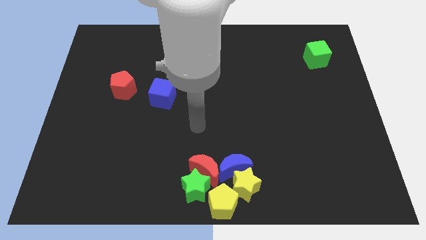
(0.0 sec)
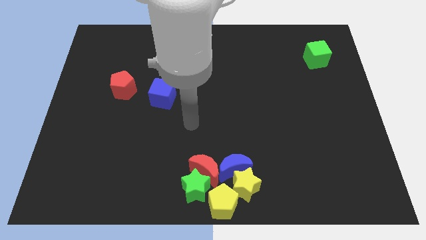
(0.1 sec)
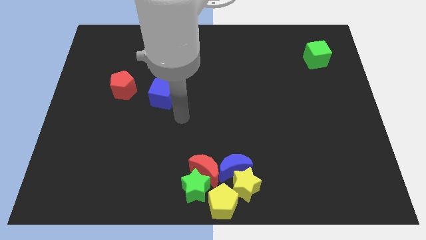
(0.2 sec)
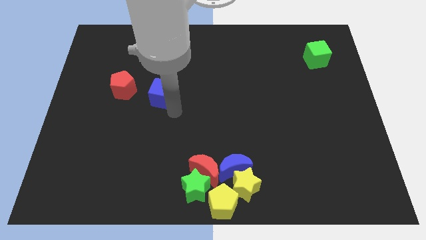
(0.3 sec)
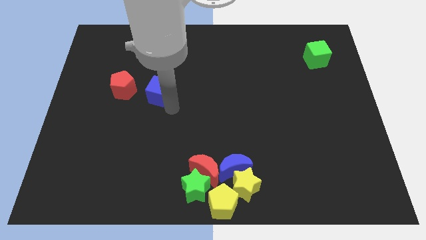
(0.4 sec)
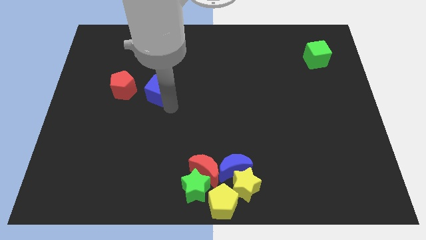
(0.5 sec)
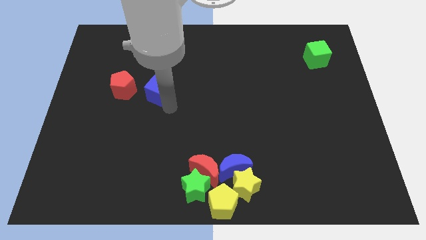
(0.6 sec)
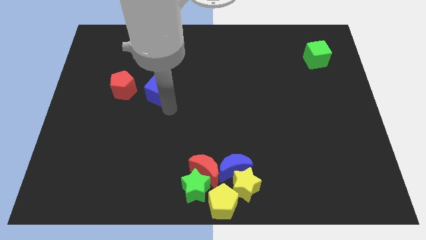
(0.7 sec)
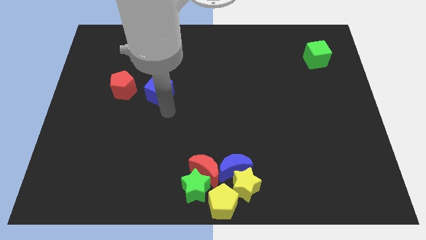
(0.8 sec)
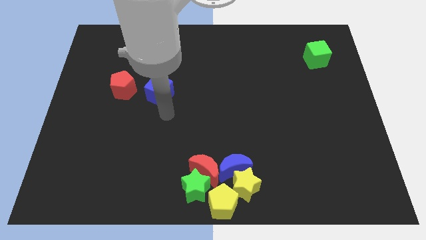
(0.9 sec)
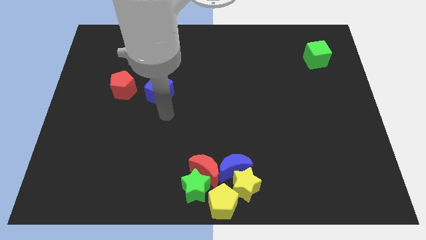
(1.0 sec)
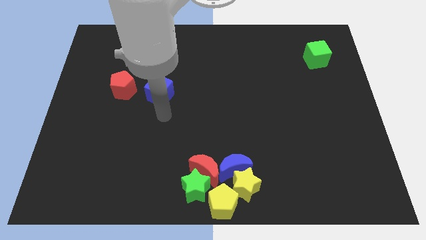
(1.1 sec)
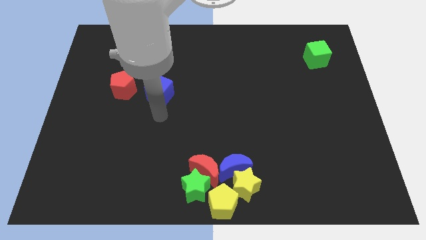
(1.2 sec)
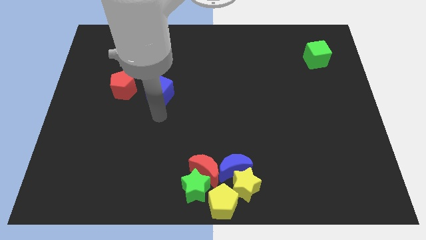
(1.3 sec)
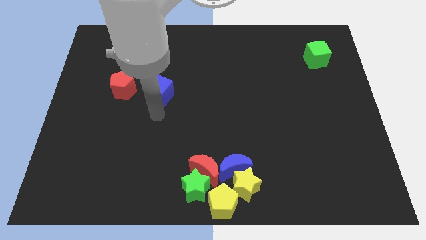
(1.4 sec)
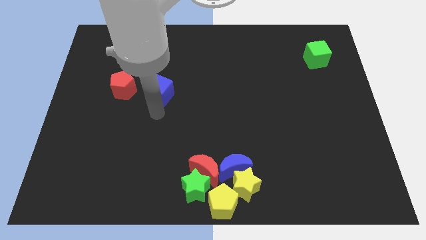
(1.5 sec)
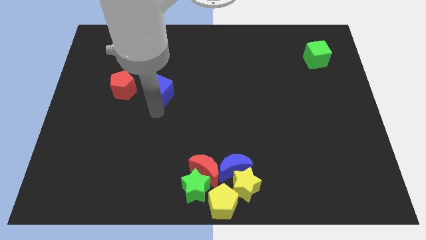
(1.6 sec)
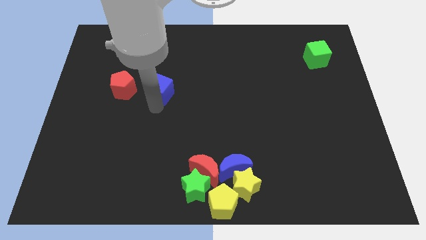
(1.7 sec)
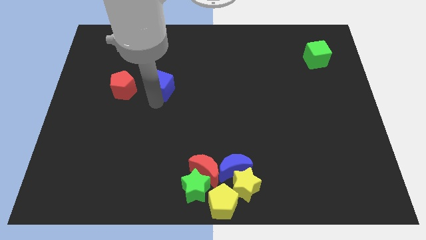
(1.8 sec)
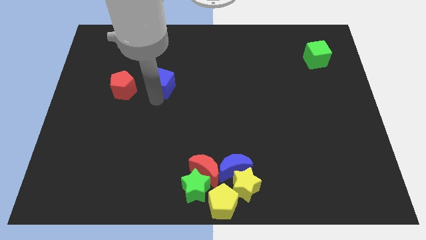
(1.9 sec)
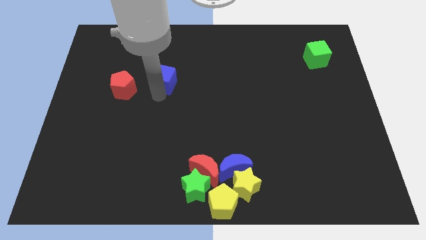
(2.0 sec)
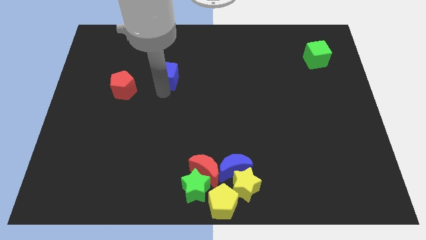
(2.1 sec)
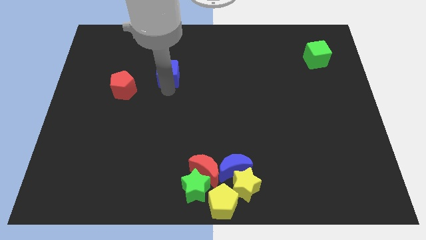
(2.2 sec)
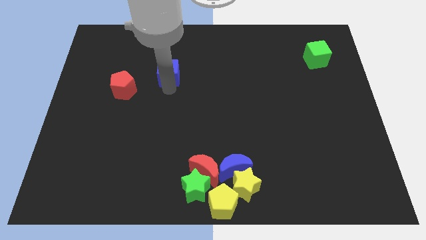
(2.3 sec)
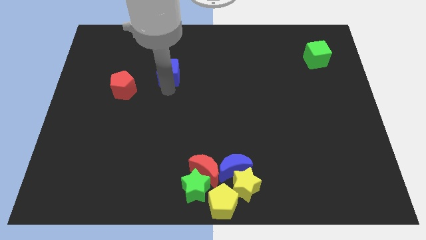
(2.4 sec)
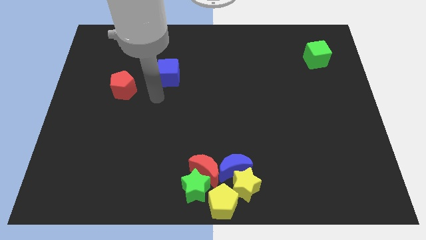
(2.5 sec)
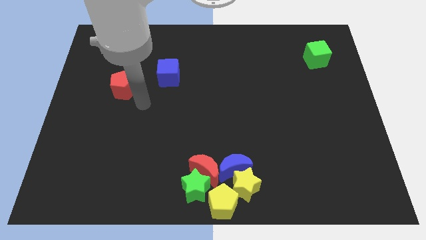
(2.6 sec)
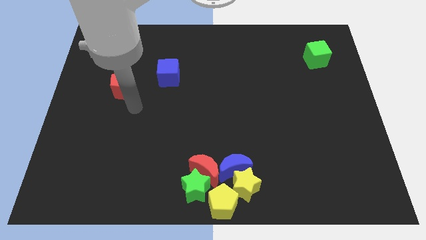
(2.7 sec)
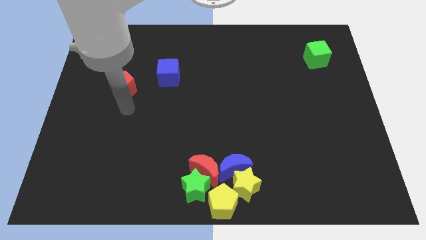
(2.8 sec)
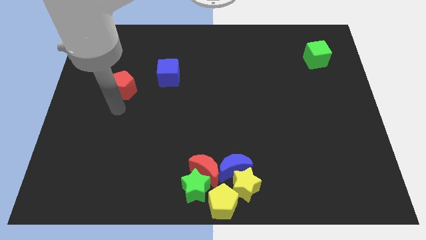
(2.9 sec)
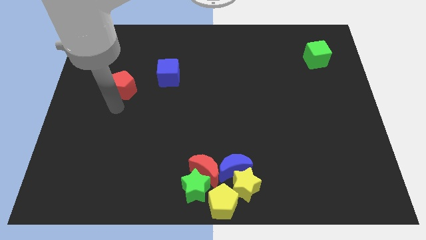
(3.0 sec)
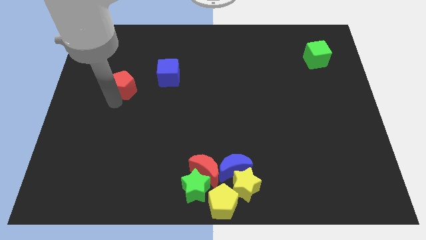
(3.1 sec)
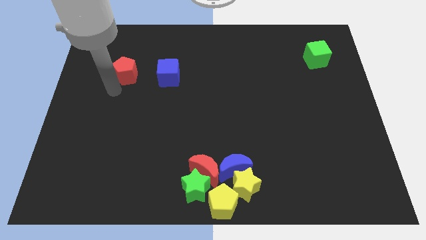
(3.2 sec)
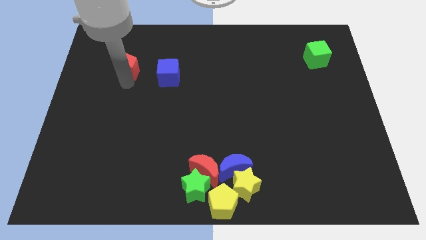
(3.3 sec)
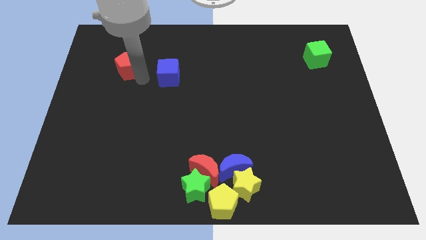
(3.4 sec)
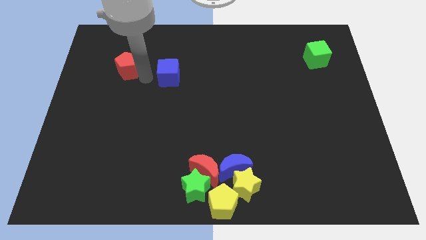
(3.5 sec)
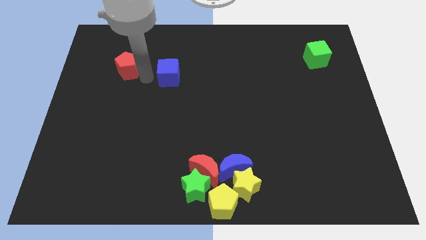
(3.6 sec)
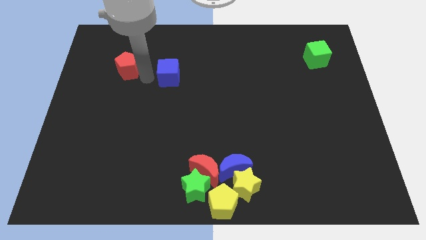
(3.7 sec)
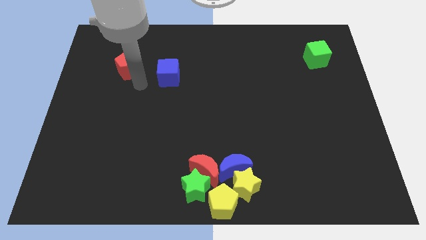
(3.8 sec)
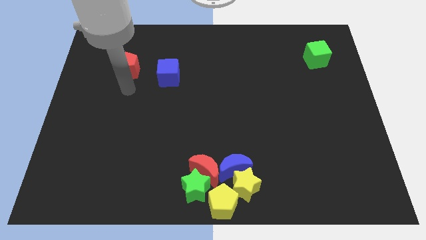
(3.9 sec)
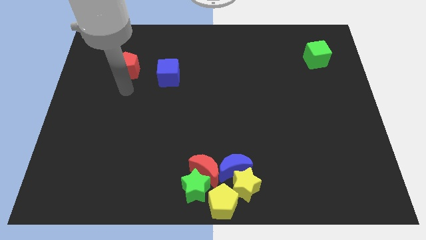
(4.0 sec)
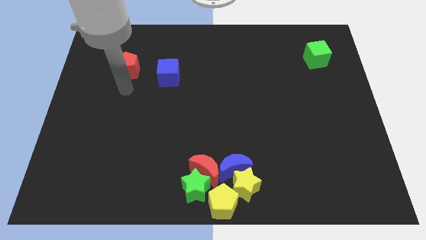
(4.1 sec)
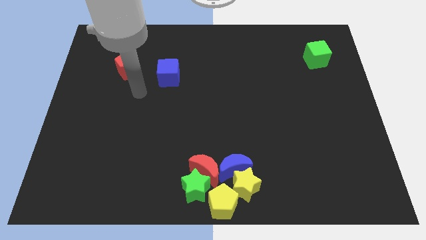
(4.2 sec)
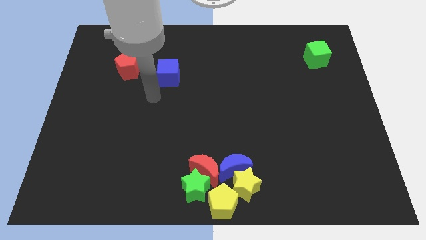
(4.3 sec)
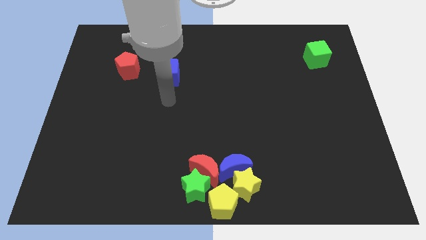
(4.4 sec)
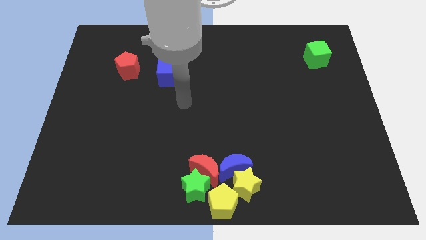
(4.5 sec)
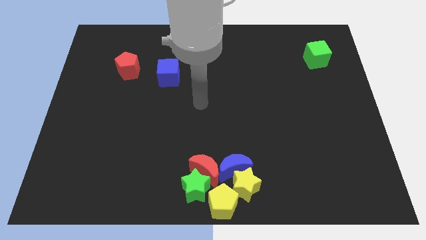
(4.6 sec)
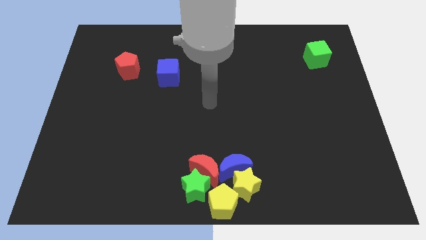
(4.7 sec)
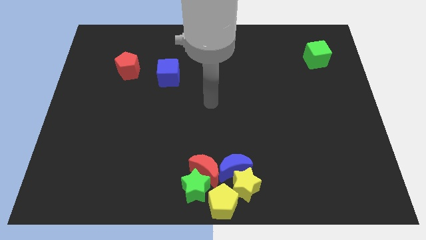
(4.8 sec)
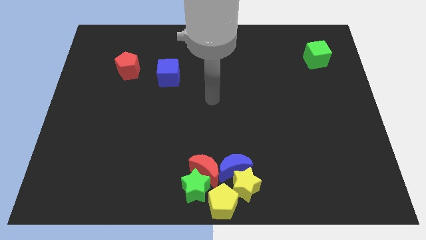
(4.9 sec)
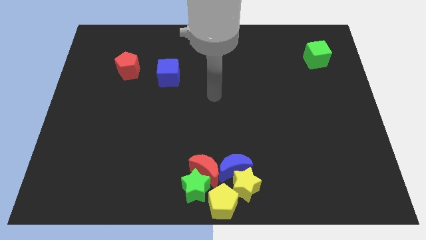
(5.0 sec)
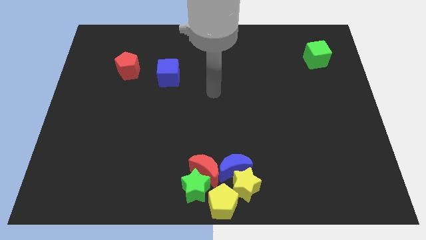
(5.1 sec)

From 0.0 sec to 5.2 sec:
push the blue cube and red pentagon slightly upwards

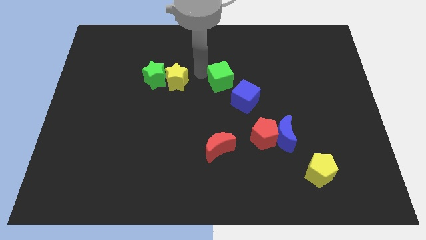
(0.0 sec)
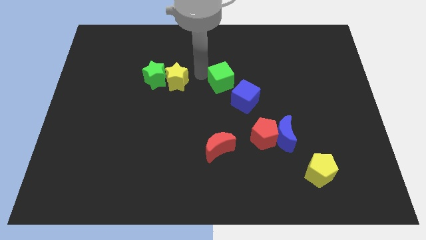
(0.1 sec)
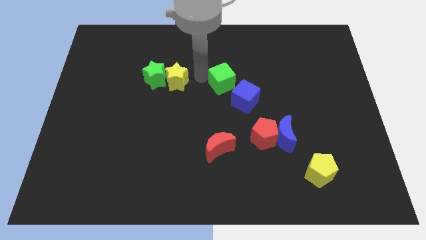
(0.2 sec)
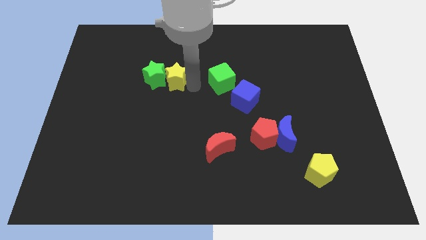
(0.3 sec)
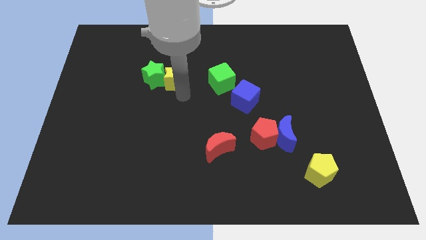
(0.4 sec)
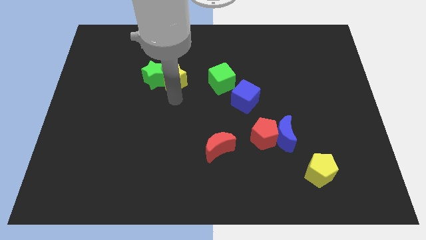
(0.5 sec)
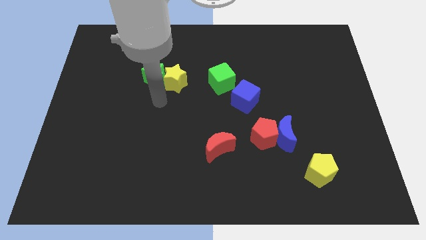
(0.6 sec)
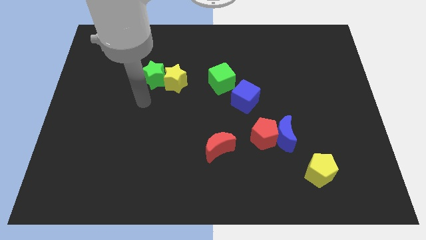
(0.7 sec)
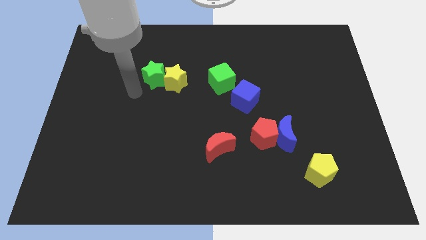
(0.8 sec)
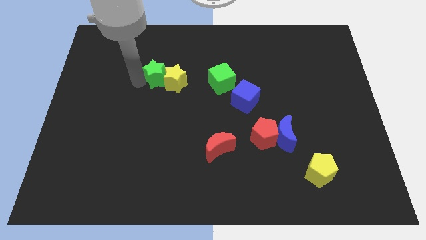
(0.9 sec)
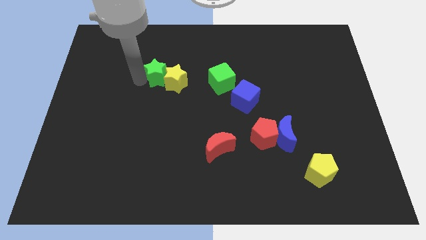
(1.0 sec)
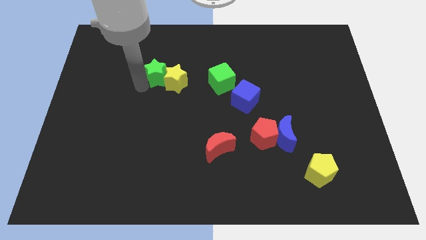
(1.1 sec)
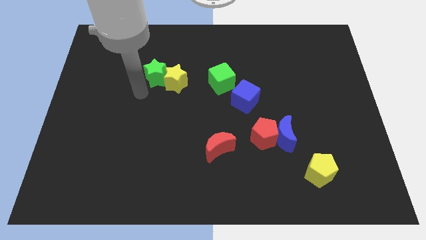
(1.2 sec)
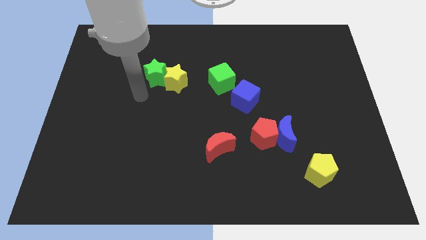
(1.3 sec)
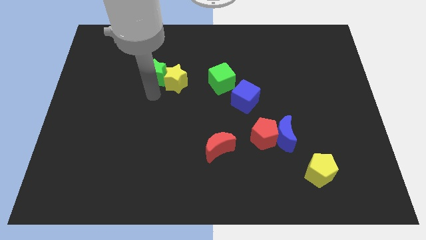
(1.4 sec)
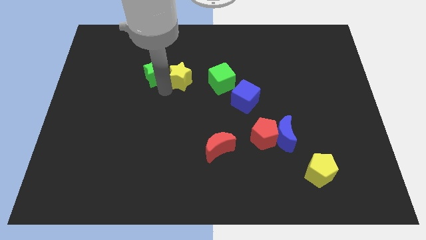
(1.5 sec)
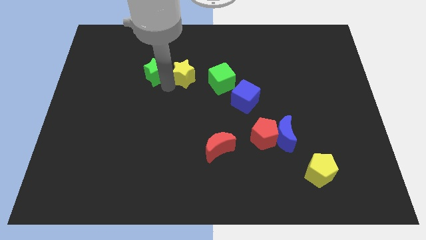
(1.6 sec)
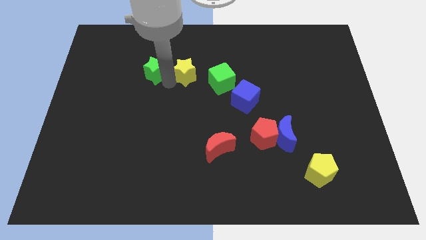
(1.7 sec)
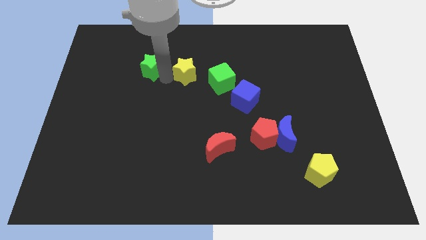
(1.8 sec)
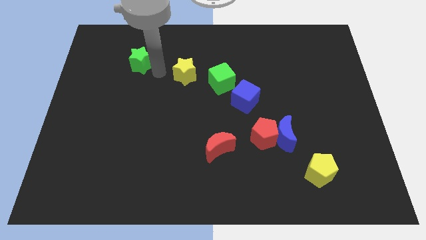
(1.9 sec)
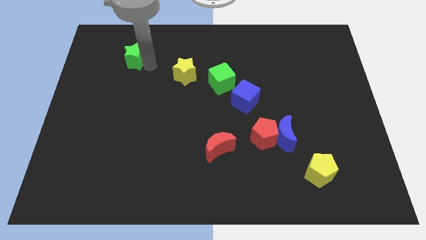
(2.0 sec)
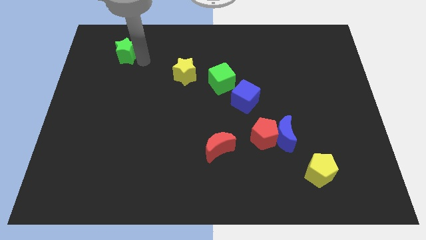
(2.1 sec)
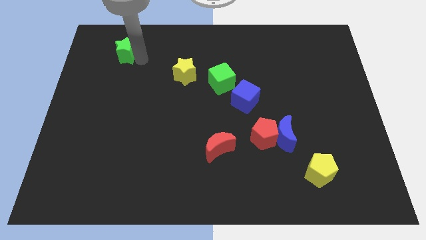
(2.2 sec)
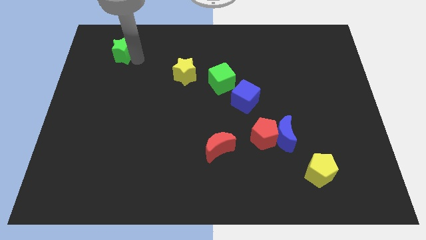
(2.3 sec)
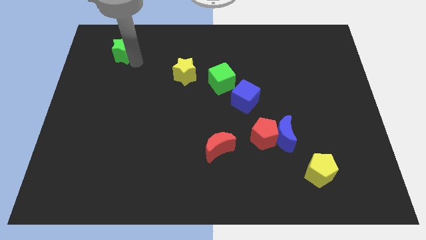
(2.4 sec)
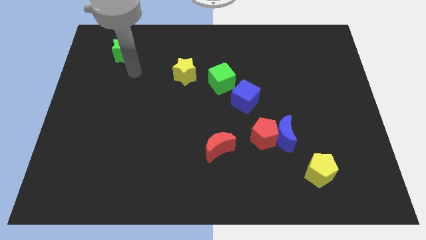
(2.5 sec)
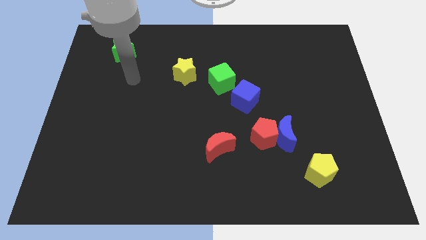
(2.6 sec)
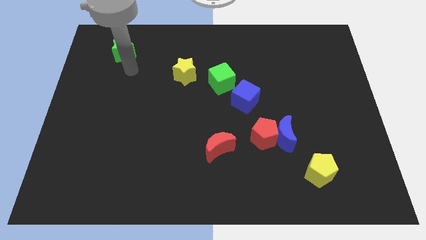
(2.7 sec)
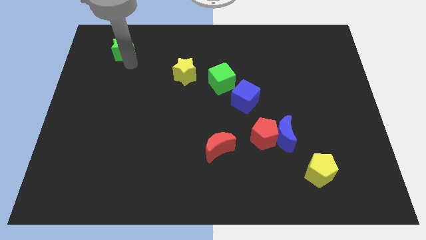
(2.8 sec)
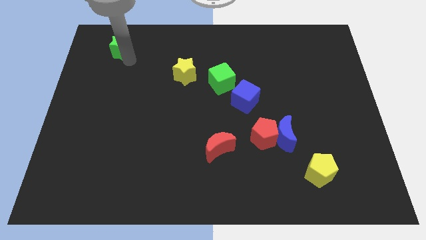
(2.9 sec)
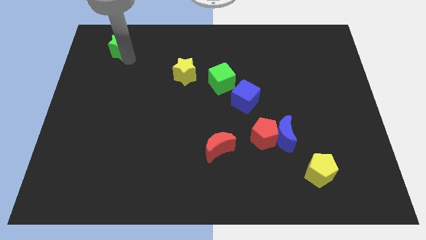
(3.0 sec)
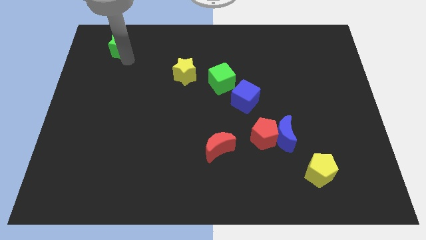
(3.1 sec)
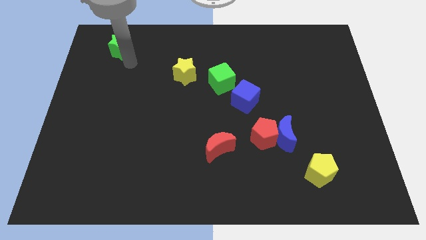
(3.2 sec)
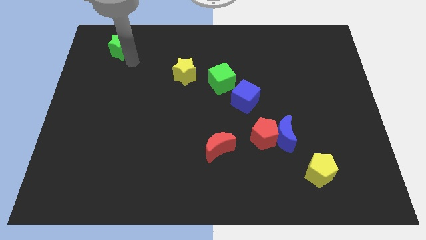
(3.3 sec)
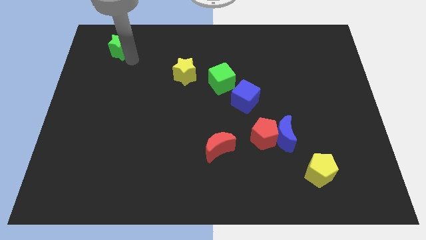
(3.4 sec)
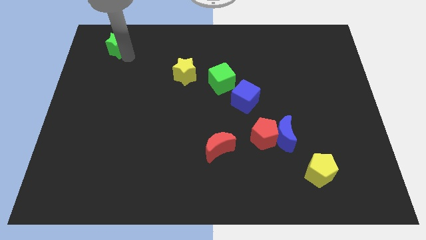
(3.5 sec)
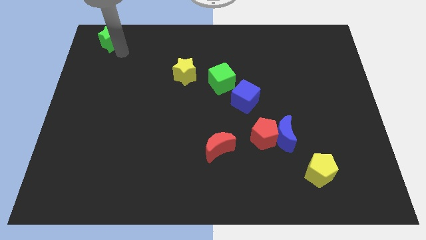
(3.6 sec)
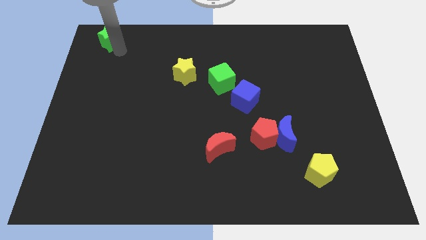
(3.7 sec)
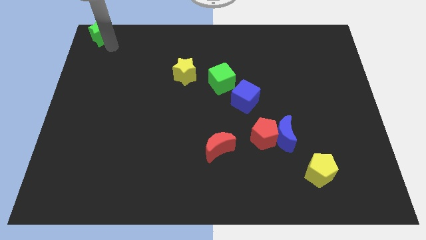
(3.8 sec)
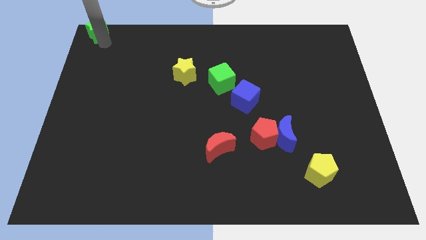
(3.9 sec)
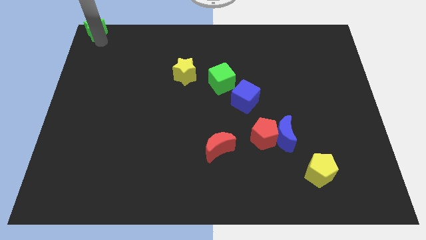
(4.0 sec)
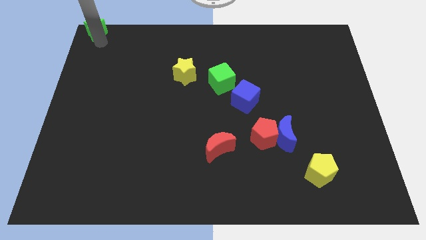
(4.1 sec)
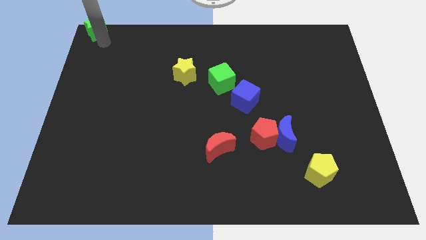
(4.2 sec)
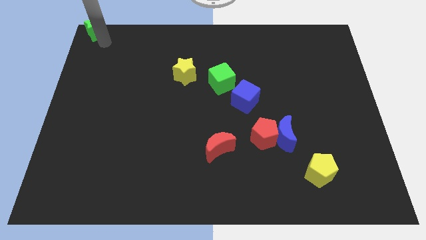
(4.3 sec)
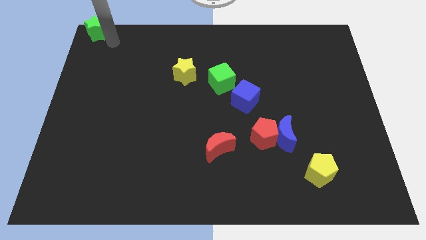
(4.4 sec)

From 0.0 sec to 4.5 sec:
push the green star to the top left corner of the board
